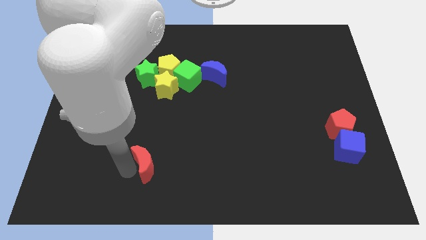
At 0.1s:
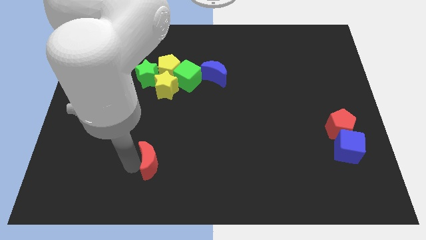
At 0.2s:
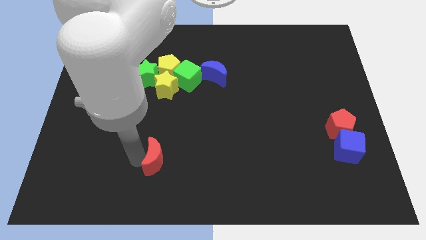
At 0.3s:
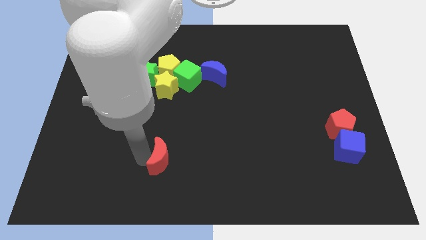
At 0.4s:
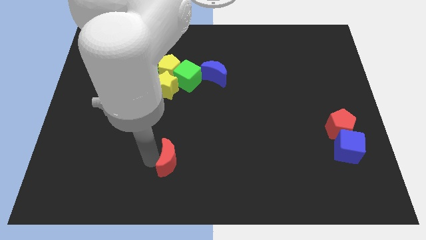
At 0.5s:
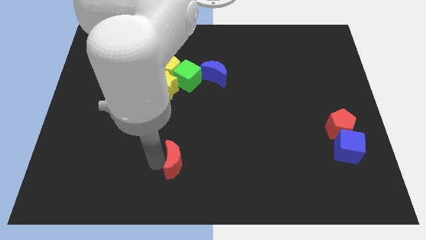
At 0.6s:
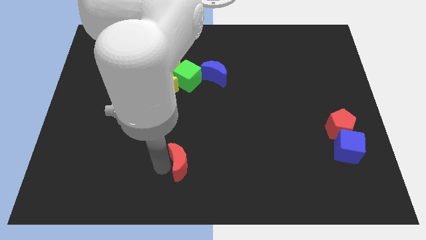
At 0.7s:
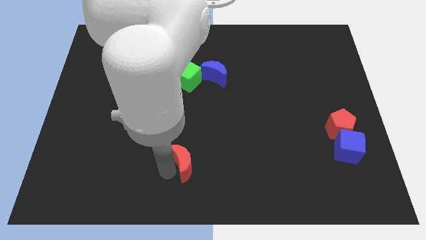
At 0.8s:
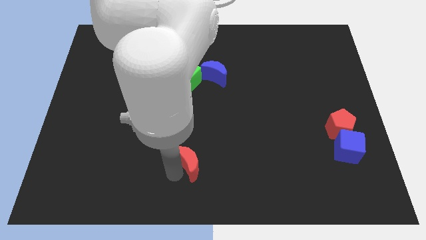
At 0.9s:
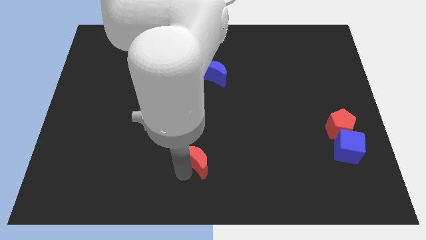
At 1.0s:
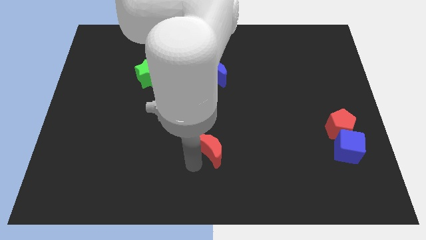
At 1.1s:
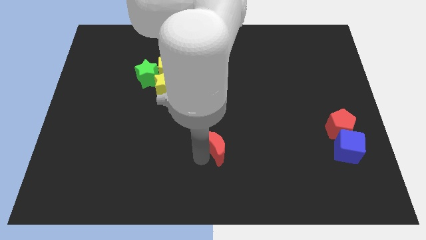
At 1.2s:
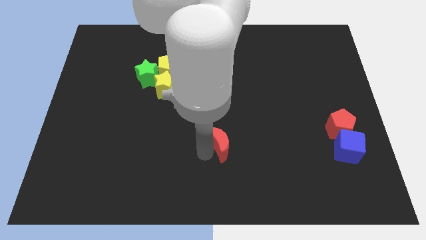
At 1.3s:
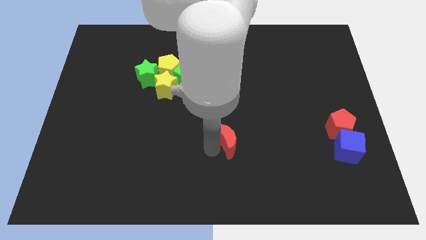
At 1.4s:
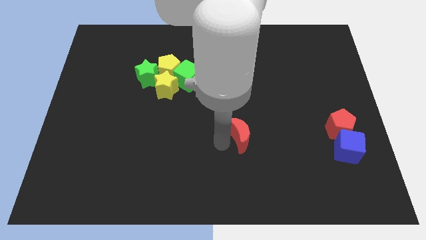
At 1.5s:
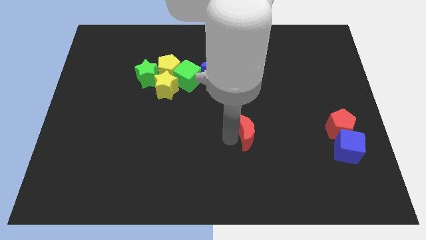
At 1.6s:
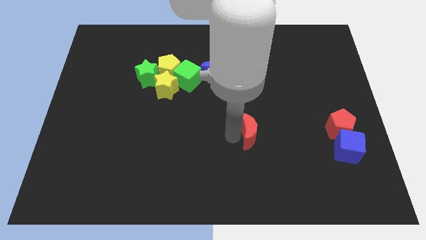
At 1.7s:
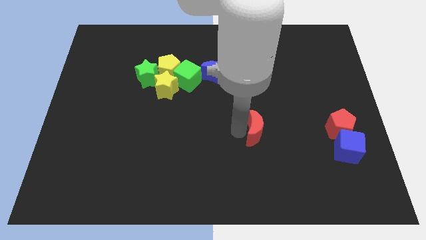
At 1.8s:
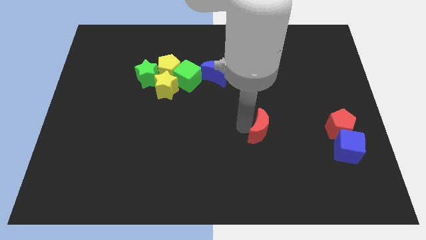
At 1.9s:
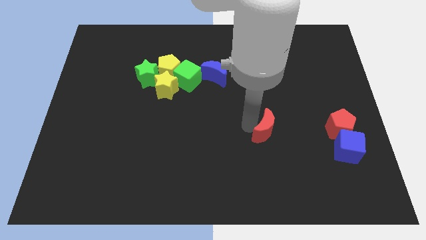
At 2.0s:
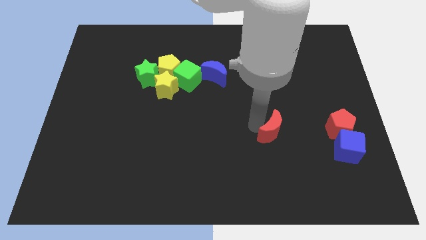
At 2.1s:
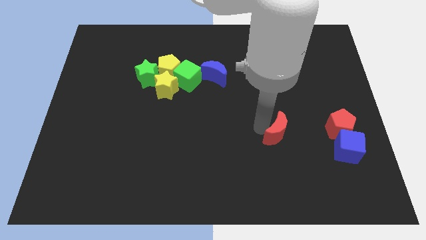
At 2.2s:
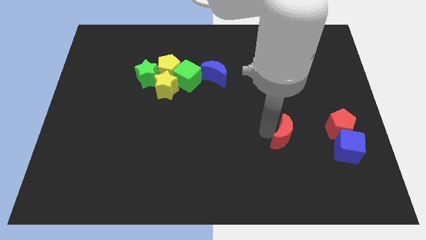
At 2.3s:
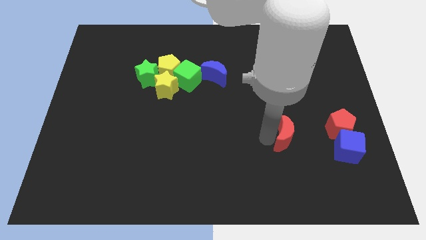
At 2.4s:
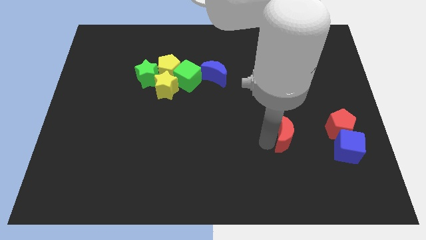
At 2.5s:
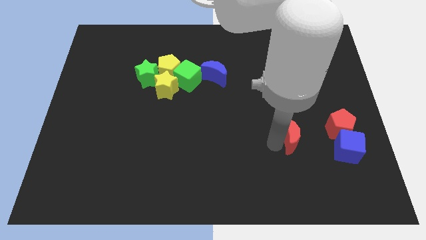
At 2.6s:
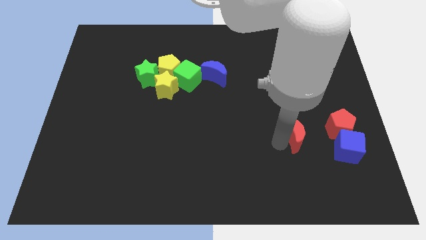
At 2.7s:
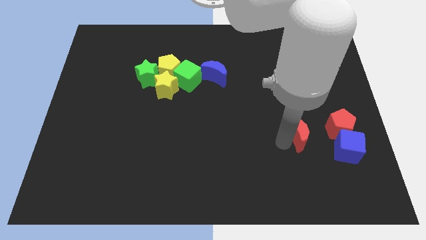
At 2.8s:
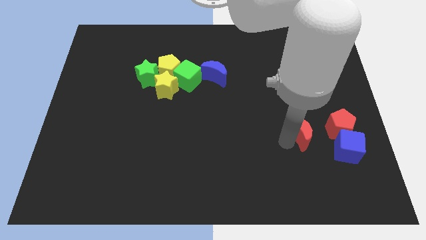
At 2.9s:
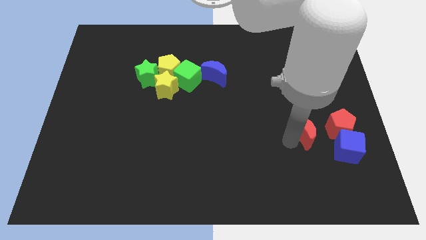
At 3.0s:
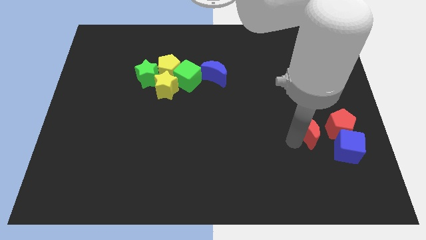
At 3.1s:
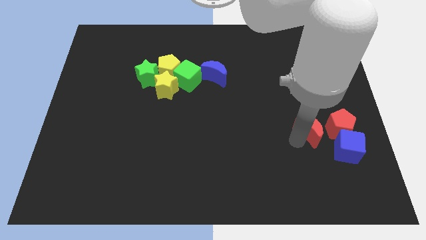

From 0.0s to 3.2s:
drag the red moon close to the red pentagon

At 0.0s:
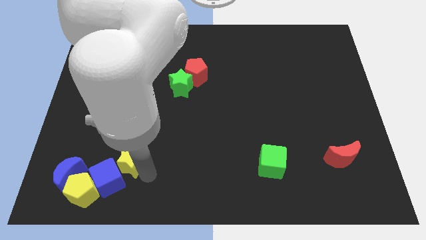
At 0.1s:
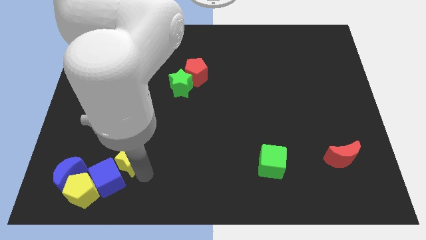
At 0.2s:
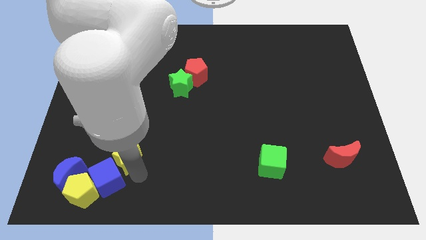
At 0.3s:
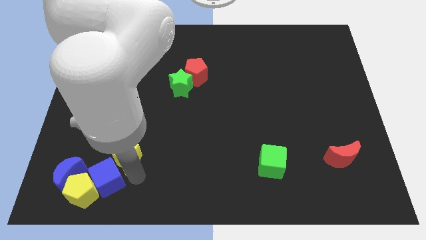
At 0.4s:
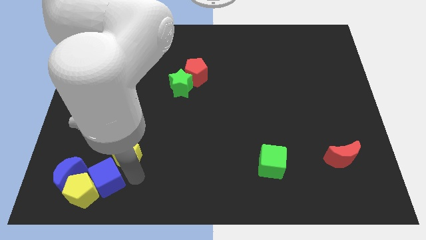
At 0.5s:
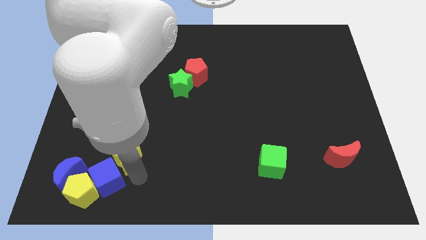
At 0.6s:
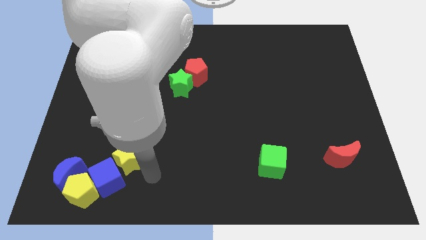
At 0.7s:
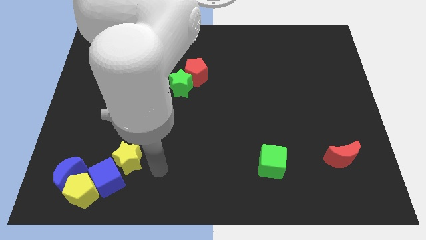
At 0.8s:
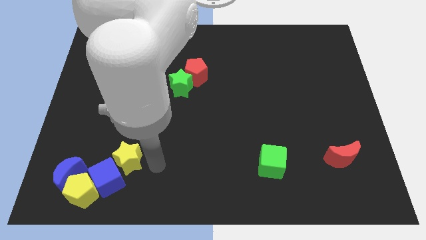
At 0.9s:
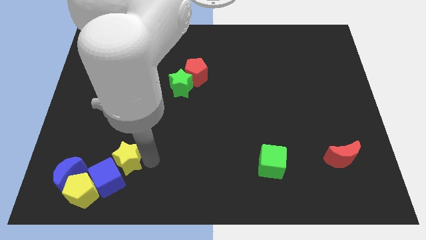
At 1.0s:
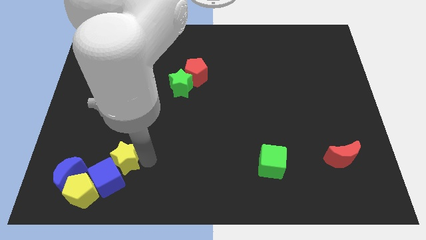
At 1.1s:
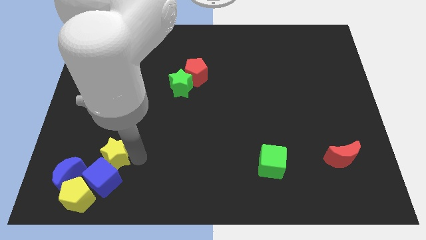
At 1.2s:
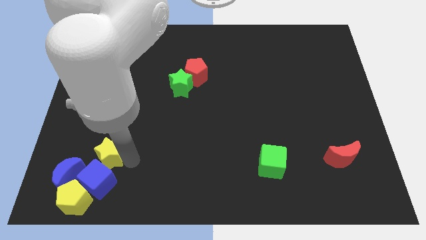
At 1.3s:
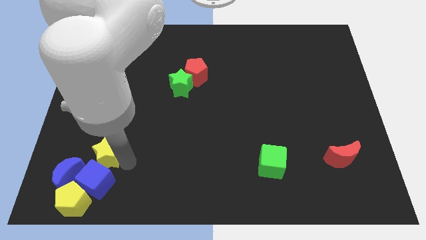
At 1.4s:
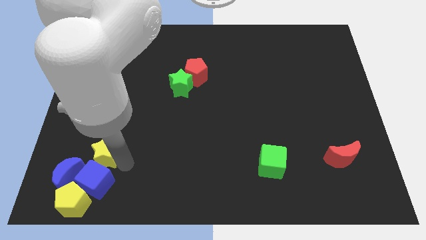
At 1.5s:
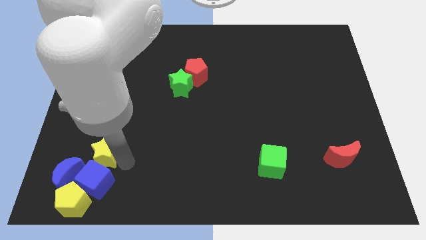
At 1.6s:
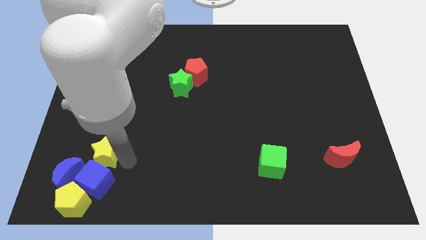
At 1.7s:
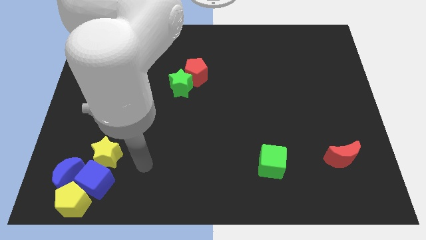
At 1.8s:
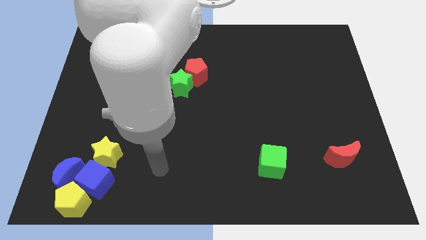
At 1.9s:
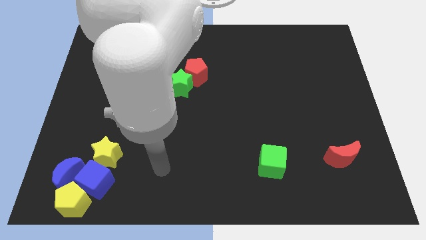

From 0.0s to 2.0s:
move yellow star towards left

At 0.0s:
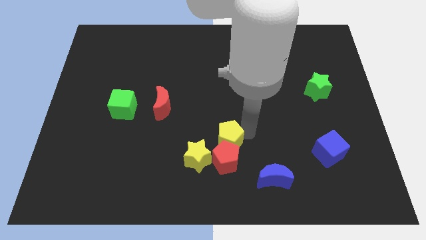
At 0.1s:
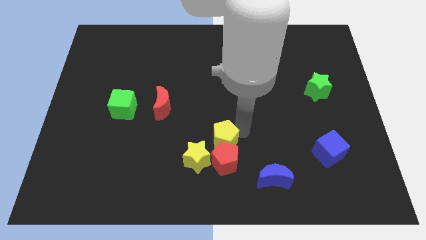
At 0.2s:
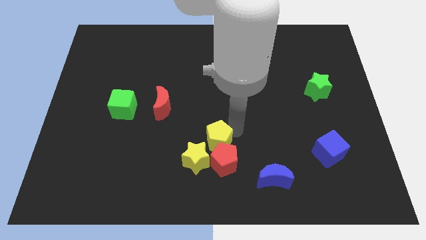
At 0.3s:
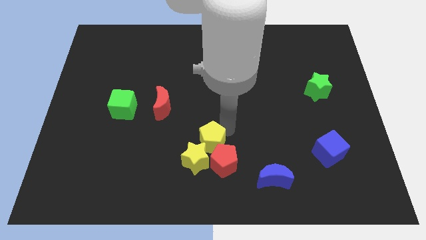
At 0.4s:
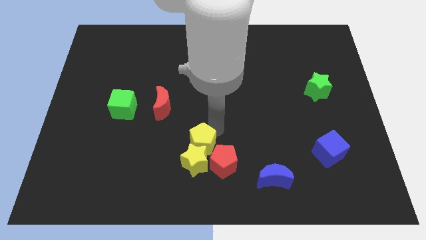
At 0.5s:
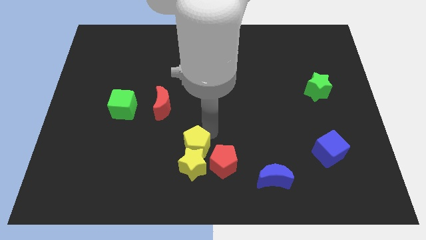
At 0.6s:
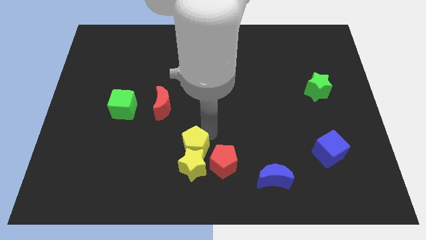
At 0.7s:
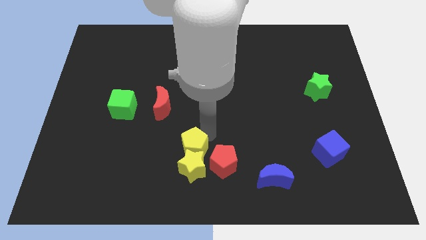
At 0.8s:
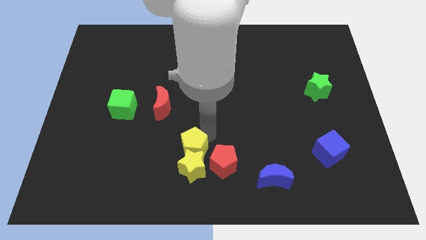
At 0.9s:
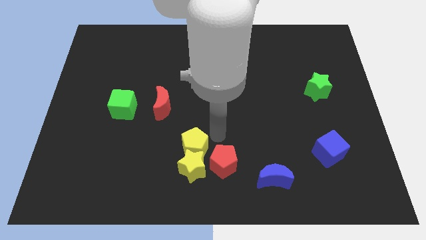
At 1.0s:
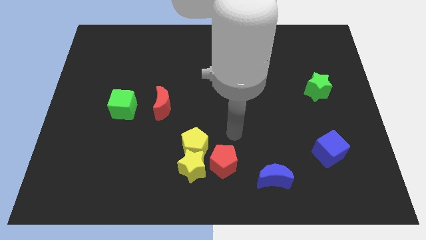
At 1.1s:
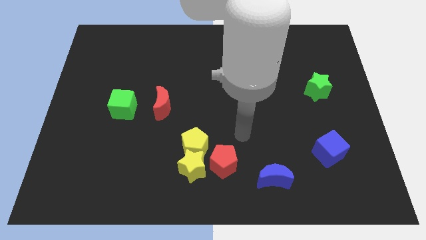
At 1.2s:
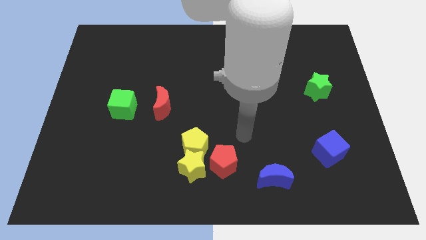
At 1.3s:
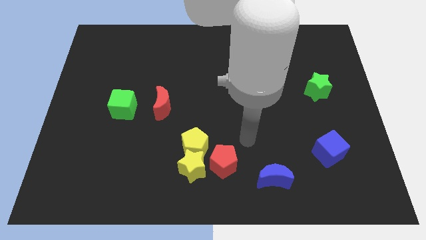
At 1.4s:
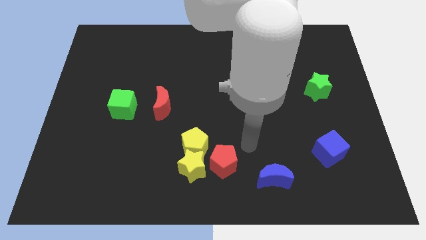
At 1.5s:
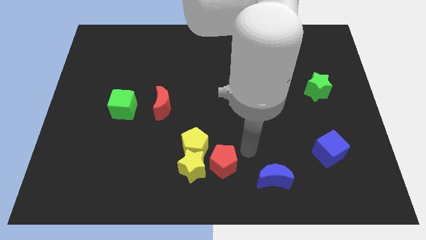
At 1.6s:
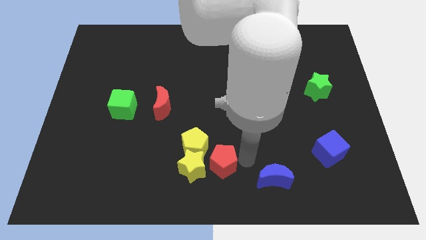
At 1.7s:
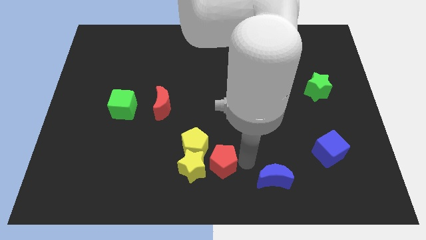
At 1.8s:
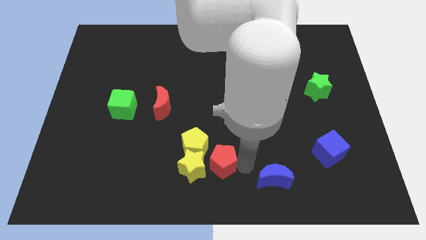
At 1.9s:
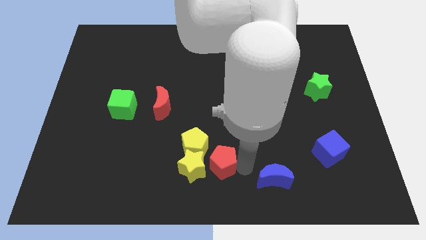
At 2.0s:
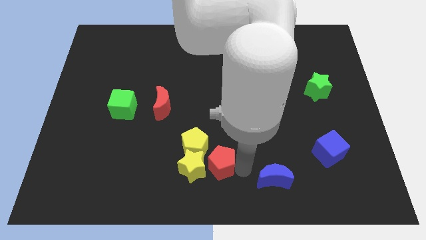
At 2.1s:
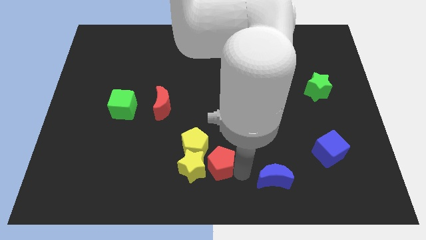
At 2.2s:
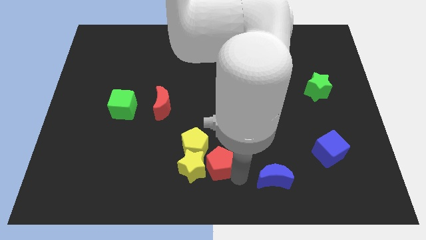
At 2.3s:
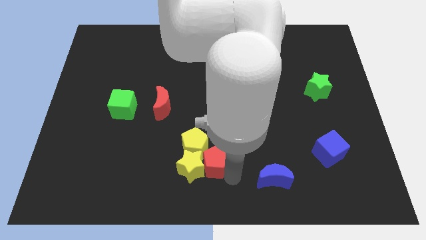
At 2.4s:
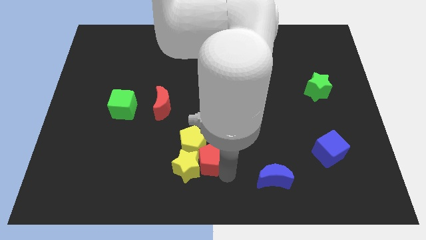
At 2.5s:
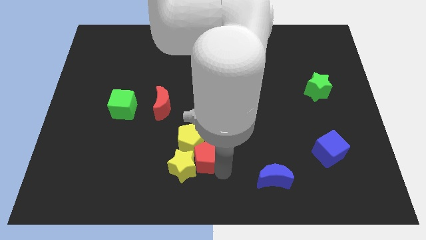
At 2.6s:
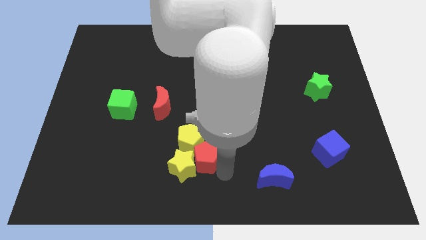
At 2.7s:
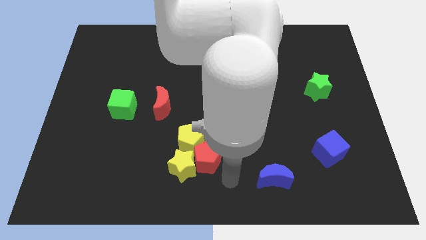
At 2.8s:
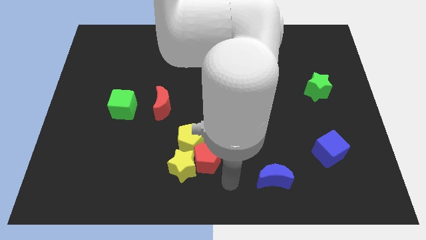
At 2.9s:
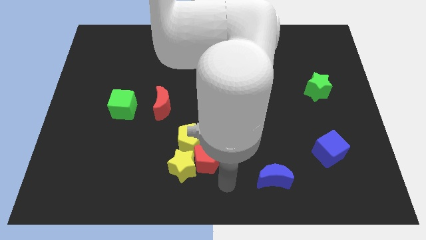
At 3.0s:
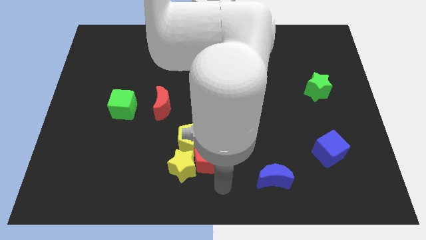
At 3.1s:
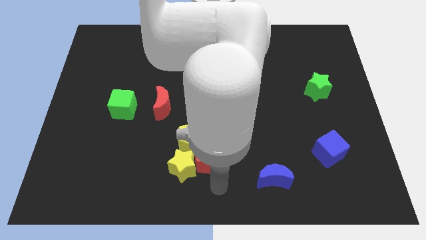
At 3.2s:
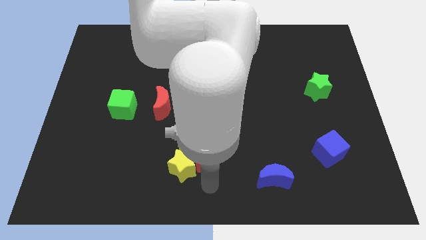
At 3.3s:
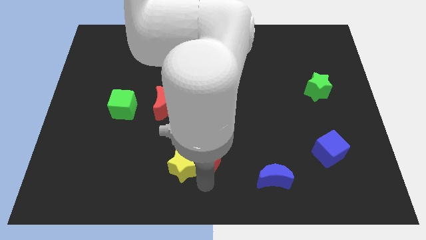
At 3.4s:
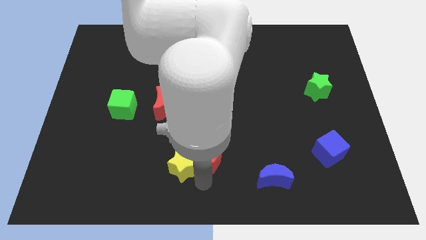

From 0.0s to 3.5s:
move the yellow pentagon into the yellow star

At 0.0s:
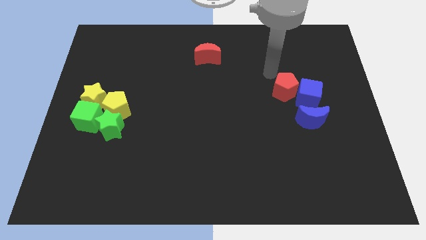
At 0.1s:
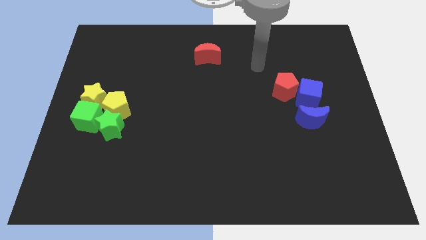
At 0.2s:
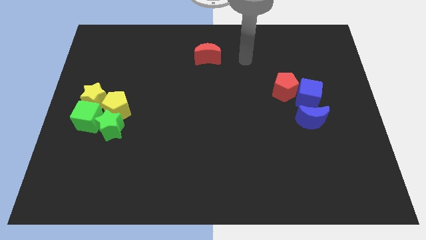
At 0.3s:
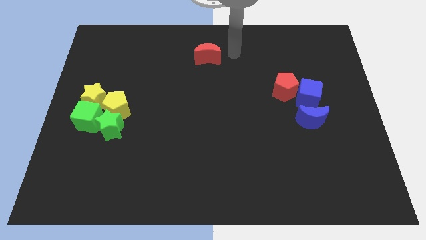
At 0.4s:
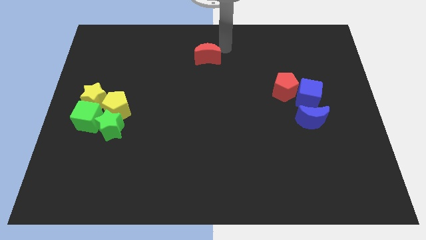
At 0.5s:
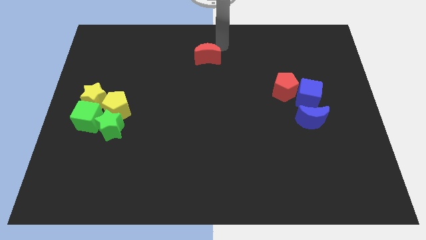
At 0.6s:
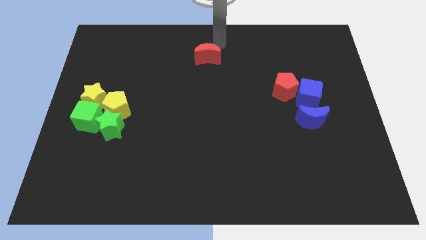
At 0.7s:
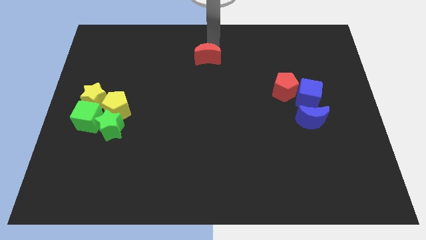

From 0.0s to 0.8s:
move your arm to the top of red crescent
